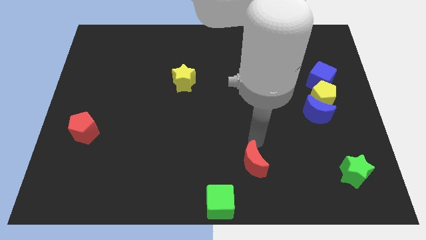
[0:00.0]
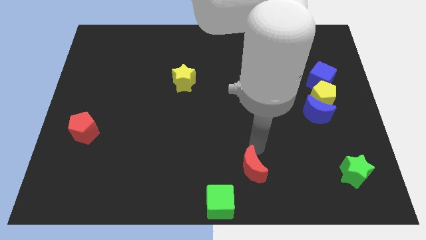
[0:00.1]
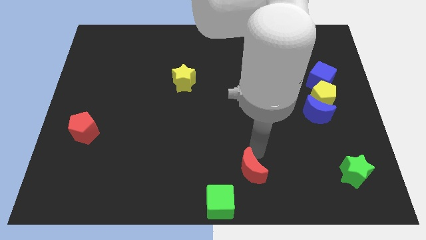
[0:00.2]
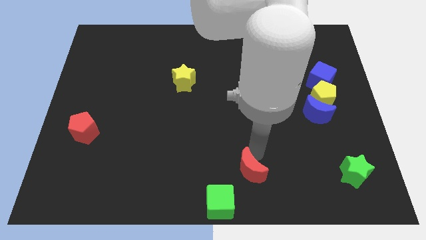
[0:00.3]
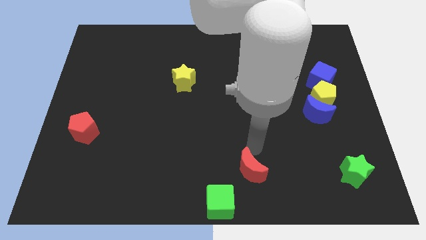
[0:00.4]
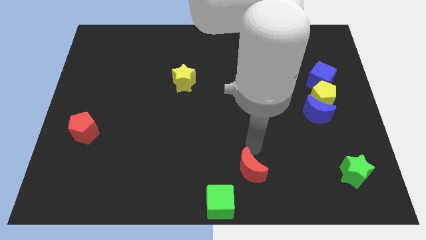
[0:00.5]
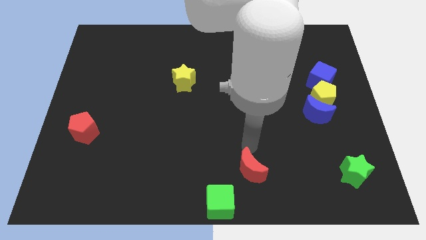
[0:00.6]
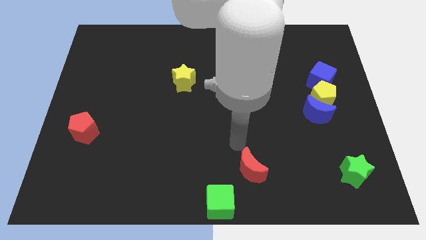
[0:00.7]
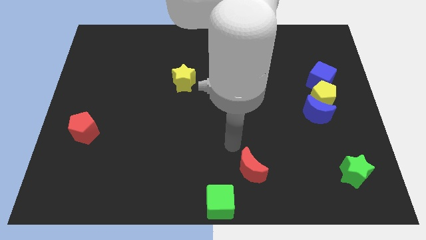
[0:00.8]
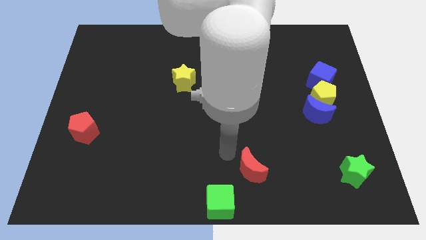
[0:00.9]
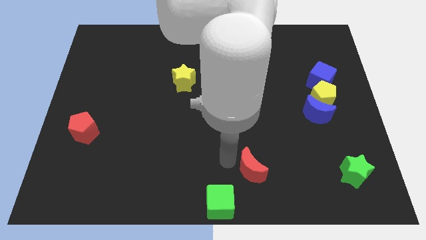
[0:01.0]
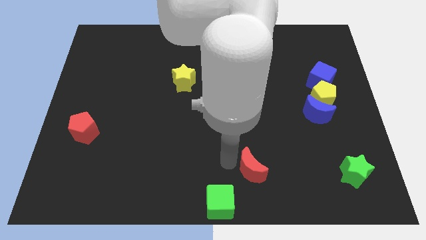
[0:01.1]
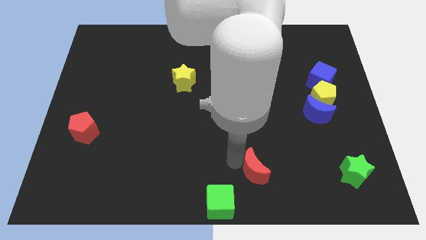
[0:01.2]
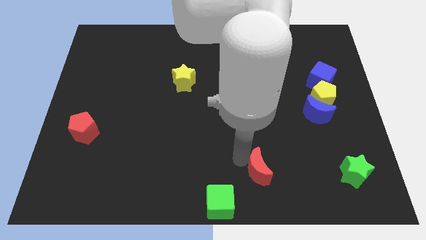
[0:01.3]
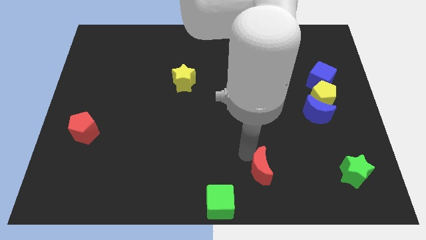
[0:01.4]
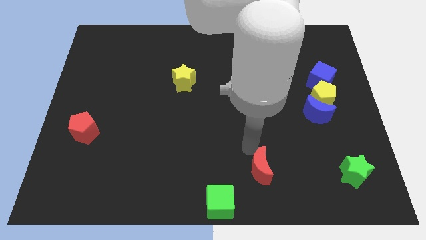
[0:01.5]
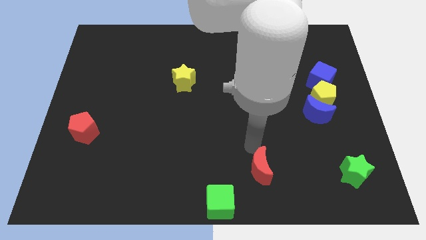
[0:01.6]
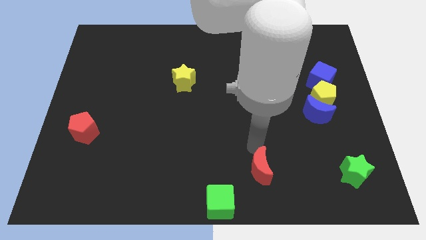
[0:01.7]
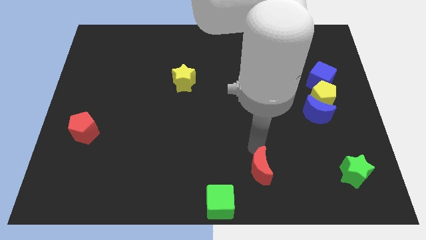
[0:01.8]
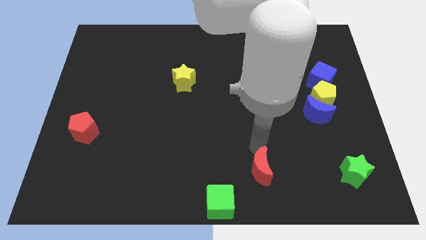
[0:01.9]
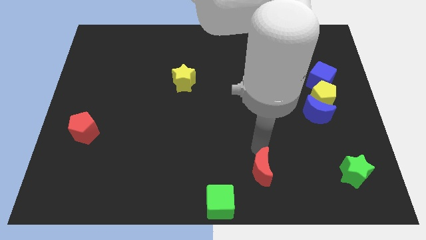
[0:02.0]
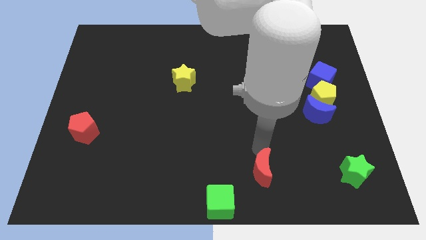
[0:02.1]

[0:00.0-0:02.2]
place the red moon to the left of green star

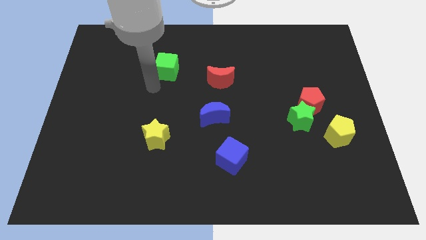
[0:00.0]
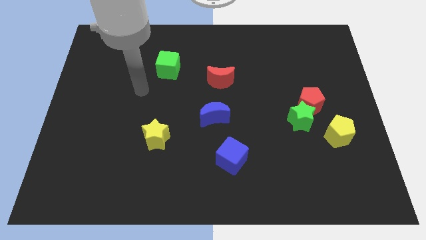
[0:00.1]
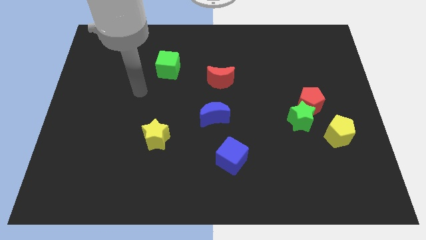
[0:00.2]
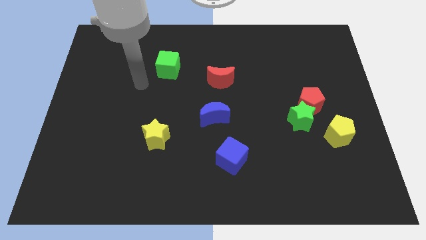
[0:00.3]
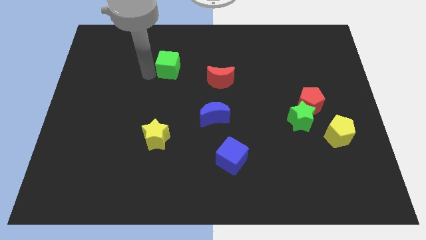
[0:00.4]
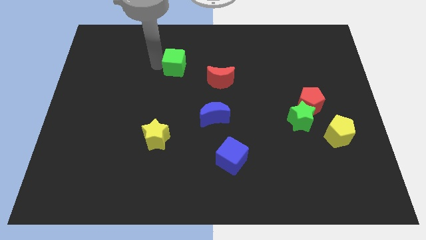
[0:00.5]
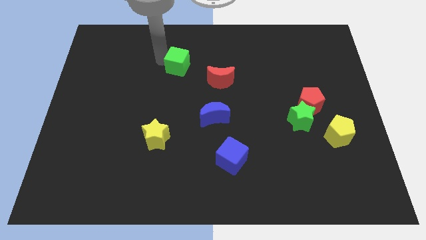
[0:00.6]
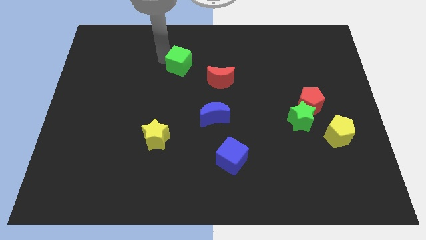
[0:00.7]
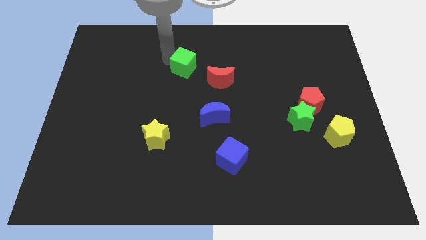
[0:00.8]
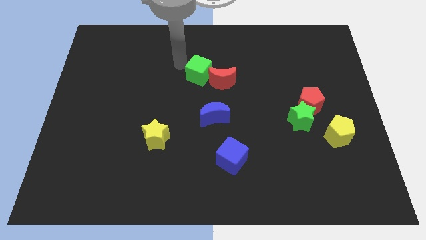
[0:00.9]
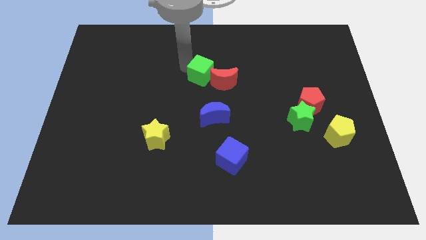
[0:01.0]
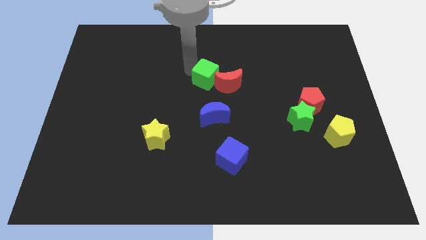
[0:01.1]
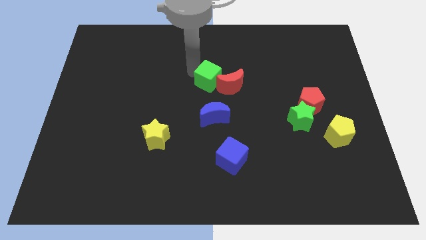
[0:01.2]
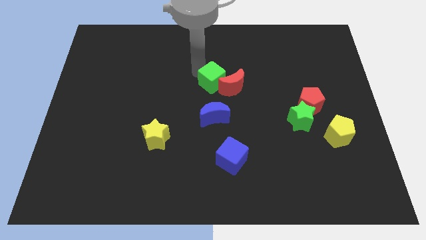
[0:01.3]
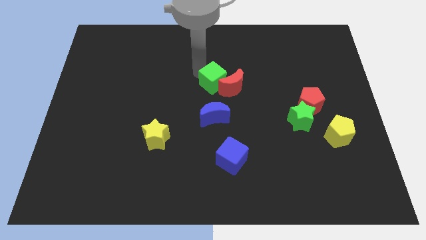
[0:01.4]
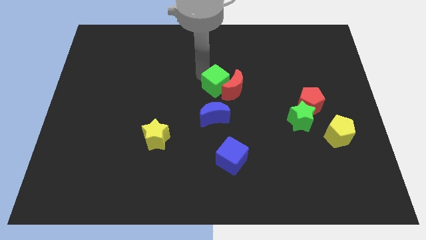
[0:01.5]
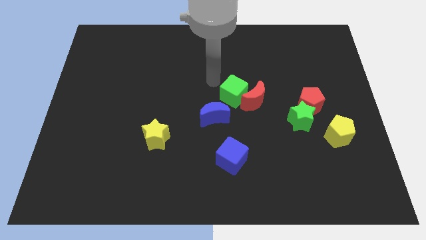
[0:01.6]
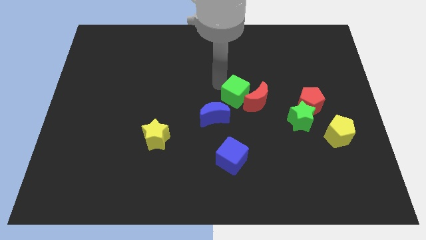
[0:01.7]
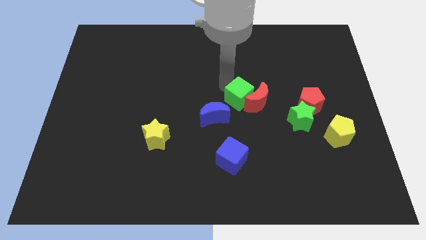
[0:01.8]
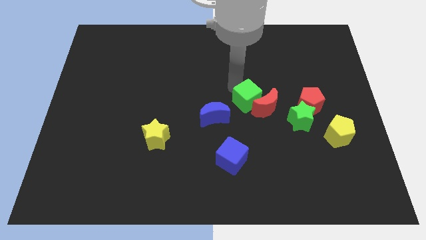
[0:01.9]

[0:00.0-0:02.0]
push the green cube into the red crescent

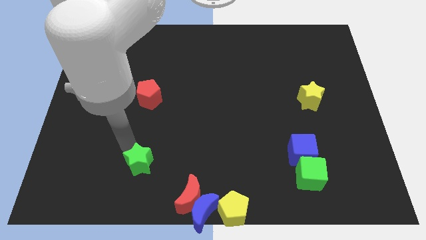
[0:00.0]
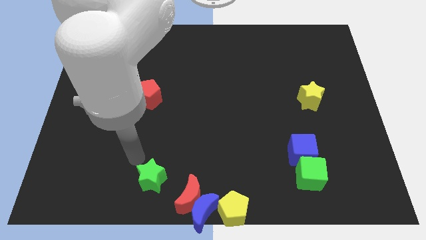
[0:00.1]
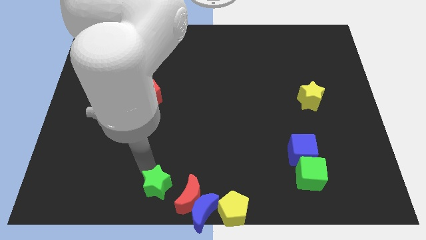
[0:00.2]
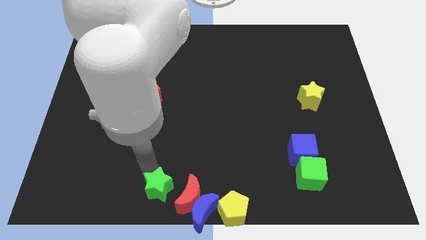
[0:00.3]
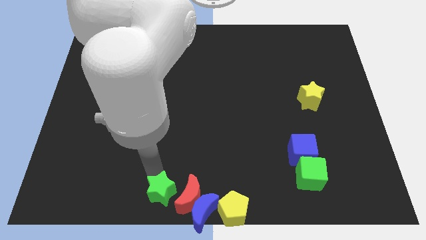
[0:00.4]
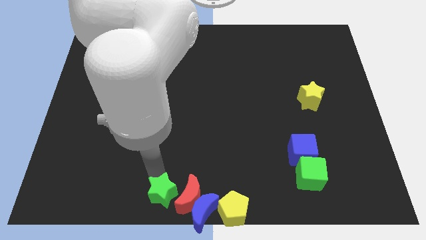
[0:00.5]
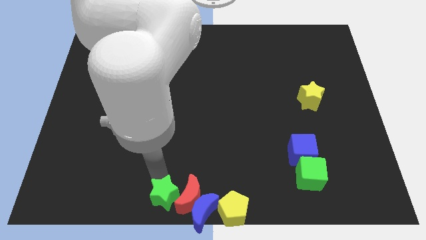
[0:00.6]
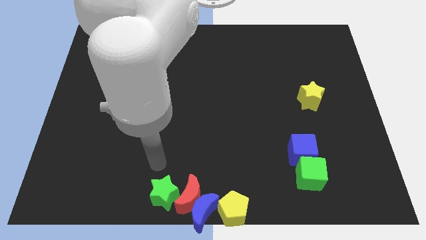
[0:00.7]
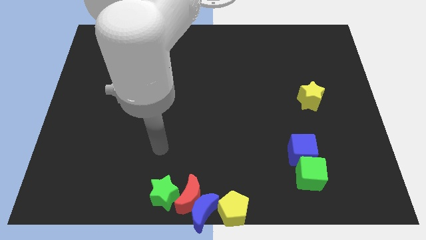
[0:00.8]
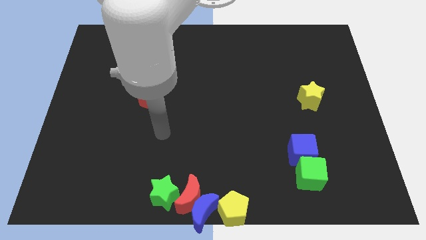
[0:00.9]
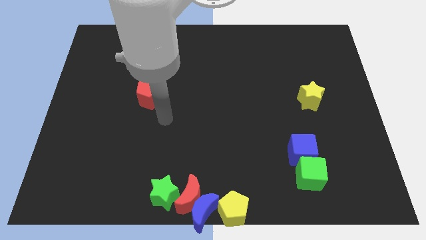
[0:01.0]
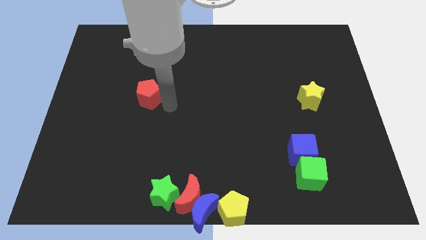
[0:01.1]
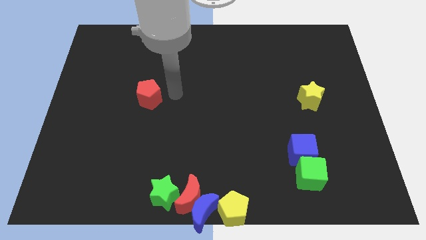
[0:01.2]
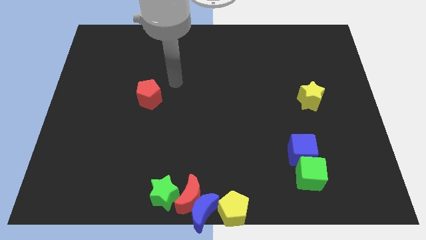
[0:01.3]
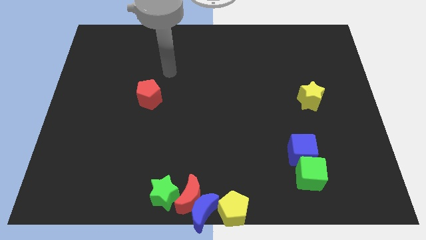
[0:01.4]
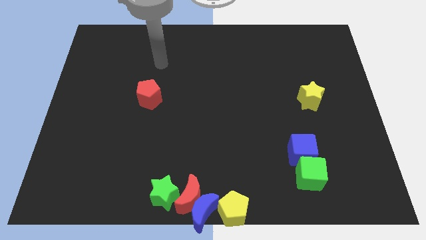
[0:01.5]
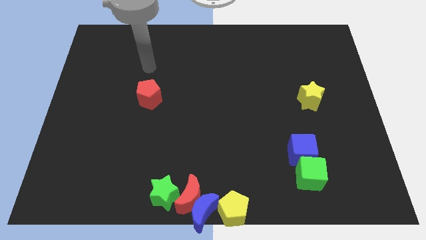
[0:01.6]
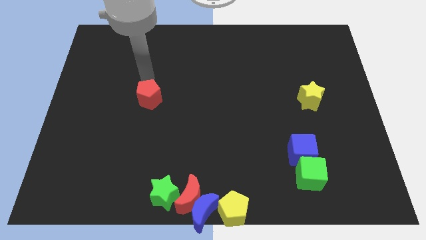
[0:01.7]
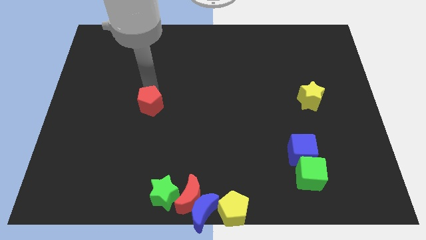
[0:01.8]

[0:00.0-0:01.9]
move the arm towards the red pentagon

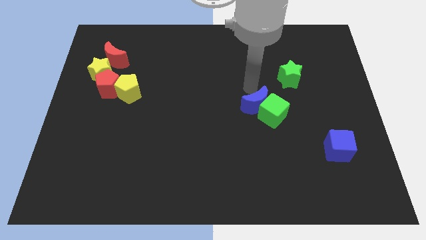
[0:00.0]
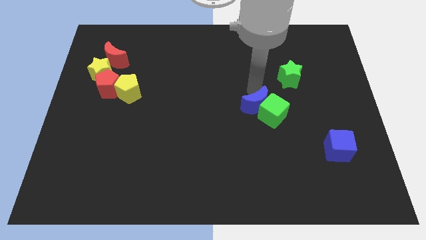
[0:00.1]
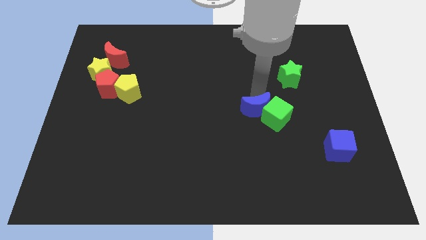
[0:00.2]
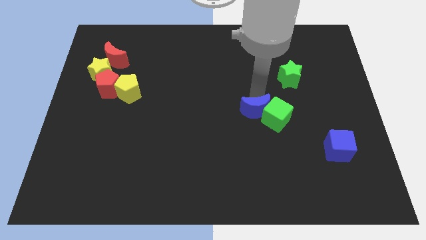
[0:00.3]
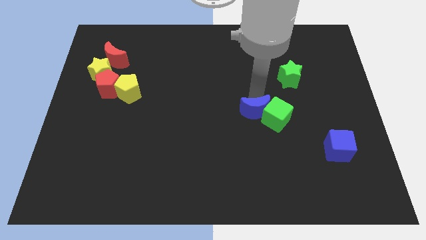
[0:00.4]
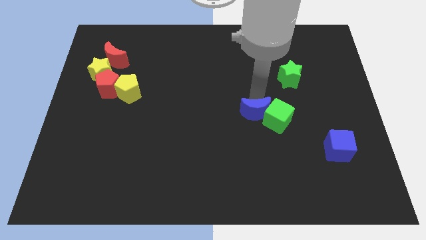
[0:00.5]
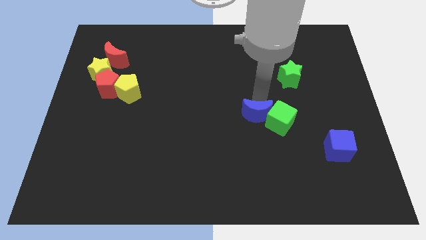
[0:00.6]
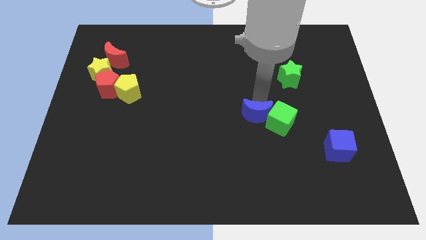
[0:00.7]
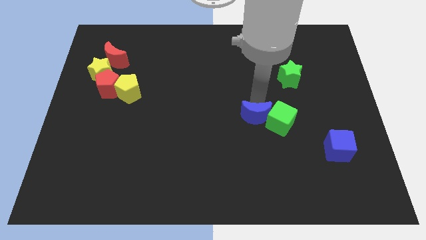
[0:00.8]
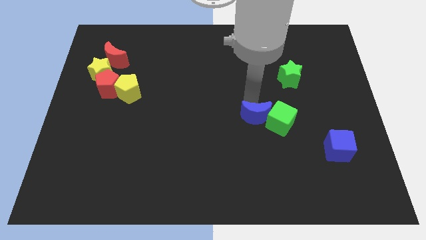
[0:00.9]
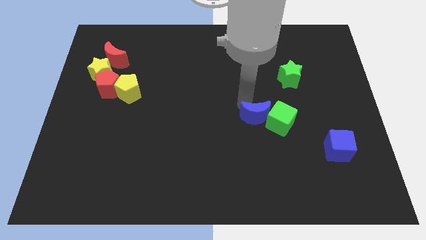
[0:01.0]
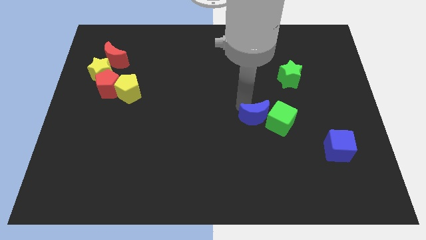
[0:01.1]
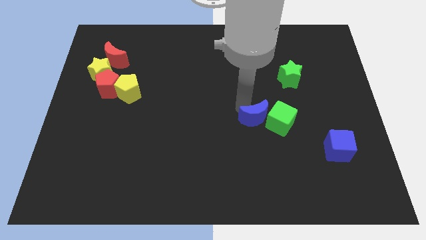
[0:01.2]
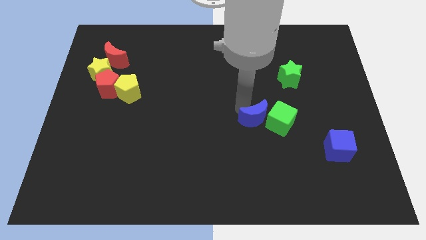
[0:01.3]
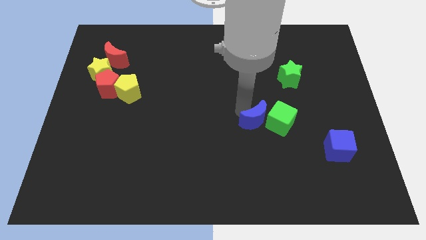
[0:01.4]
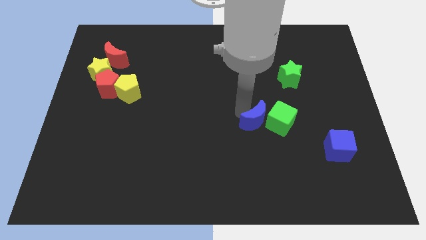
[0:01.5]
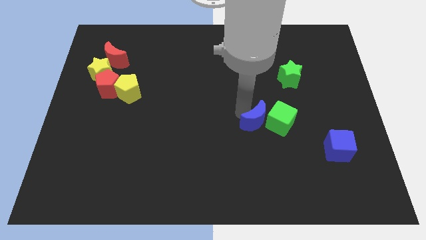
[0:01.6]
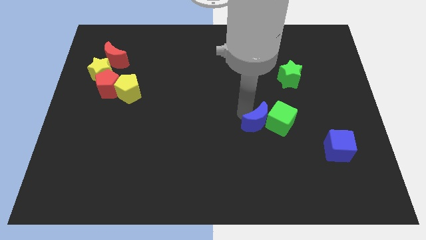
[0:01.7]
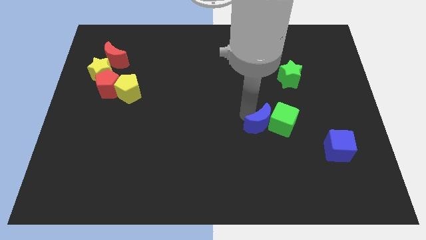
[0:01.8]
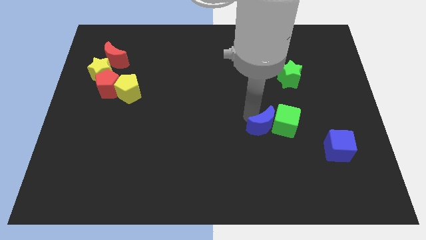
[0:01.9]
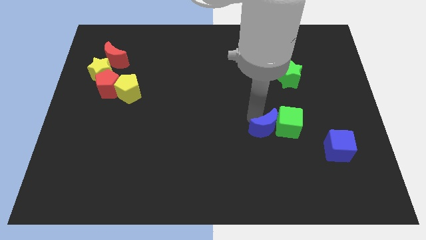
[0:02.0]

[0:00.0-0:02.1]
push the blue moon and green cube downward

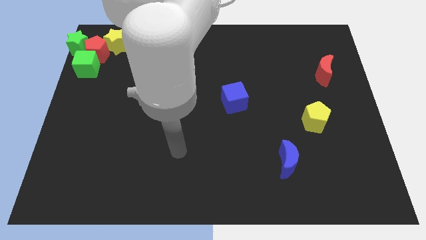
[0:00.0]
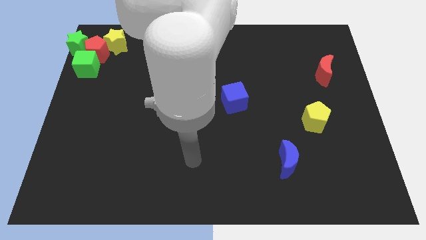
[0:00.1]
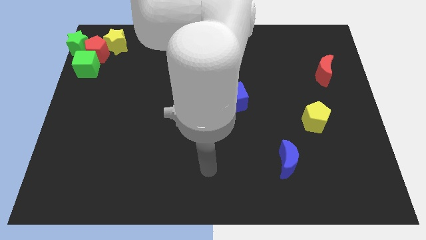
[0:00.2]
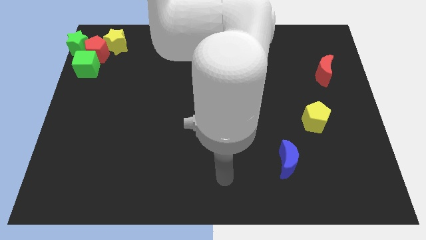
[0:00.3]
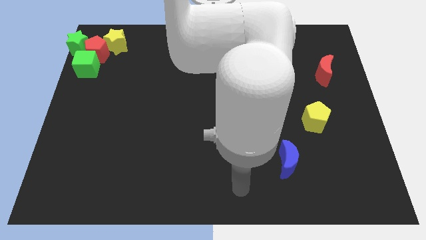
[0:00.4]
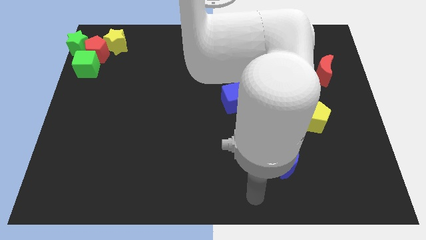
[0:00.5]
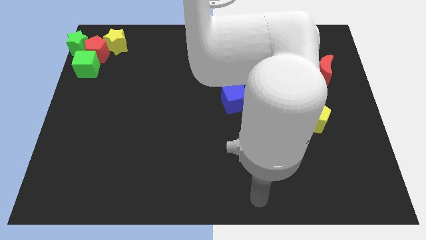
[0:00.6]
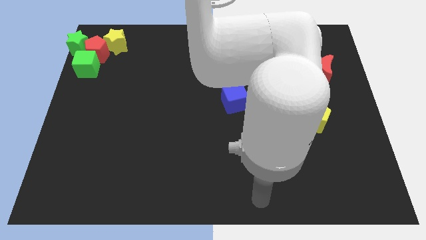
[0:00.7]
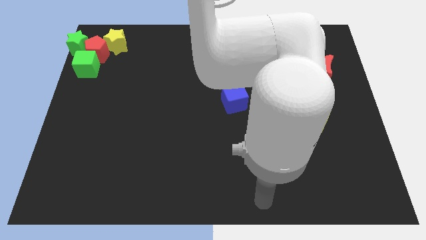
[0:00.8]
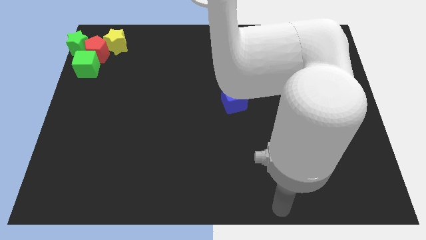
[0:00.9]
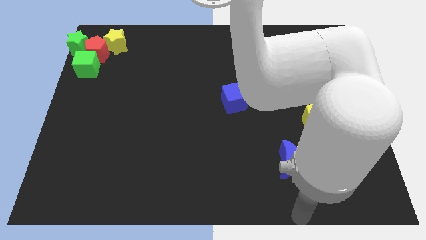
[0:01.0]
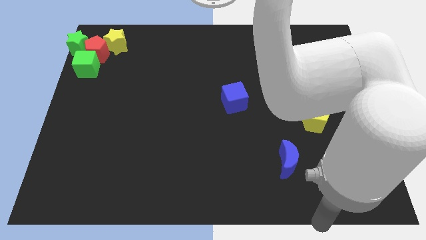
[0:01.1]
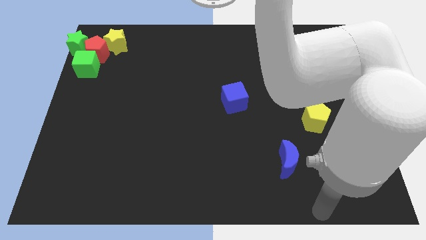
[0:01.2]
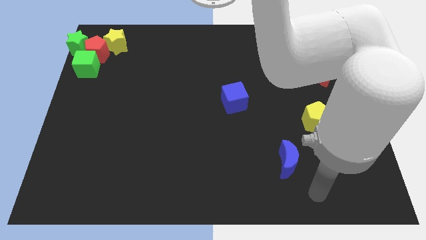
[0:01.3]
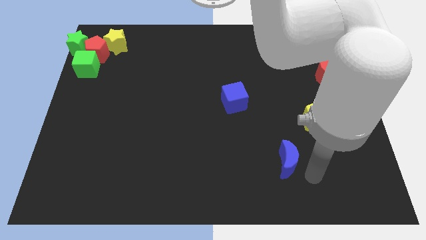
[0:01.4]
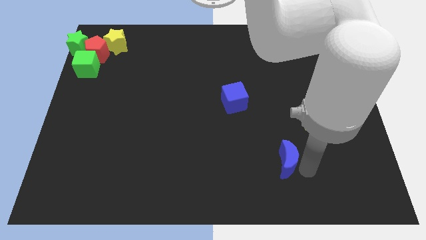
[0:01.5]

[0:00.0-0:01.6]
point at the right side of the blue moon
